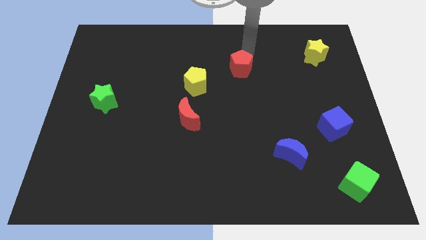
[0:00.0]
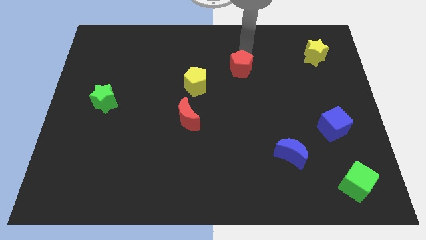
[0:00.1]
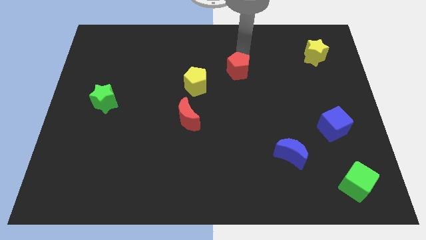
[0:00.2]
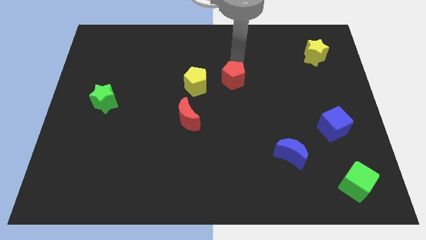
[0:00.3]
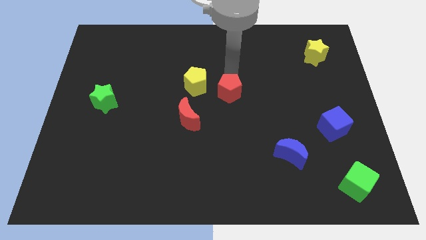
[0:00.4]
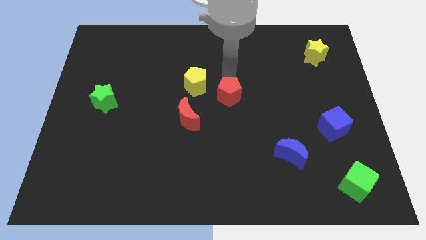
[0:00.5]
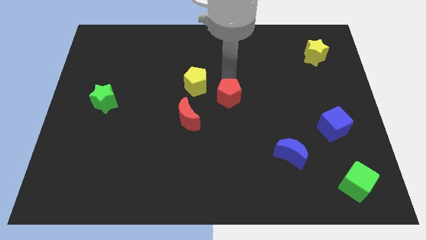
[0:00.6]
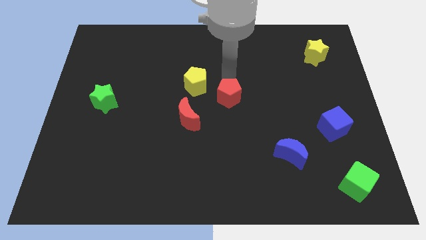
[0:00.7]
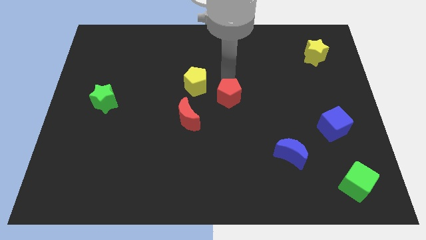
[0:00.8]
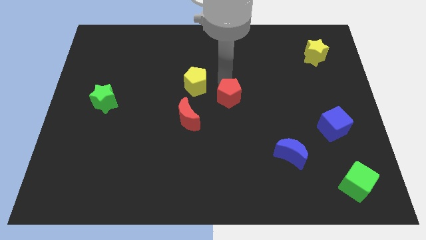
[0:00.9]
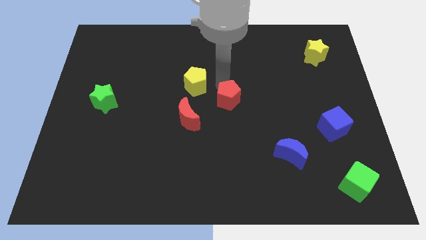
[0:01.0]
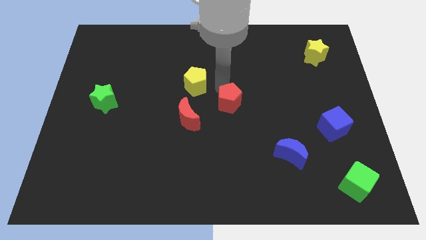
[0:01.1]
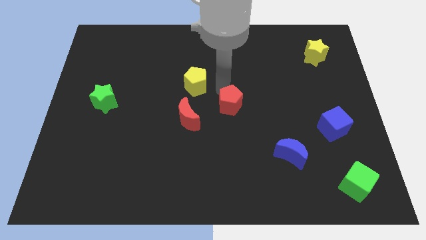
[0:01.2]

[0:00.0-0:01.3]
push red pentagon to the center of the board

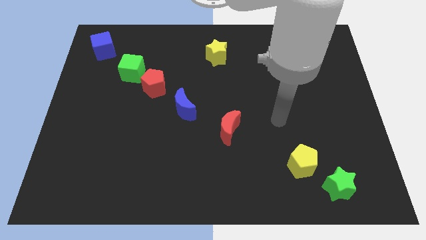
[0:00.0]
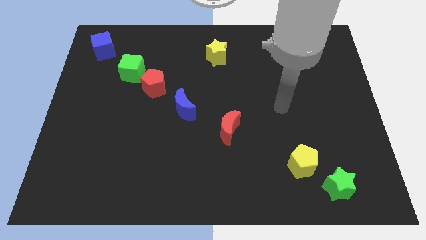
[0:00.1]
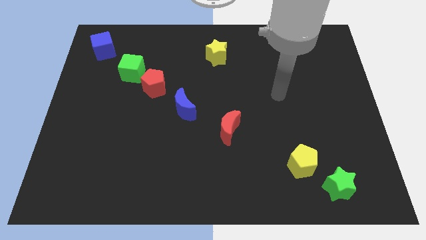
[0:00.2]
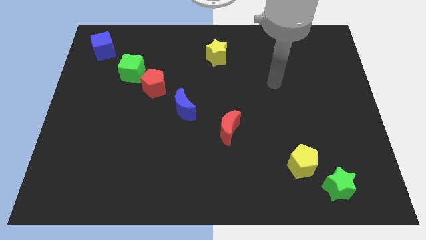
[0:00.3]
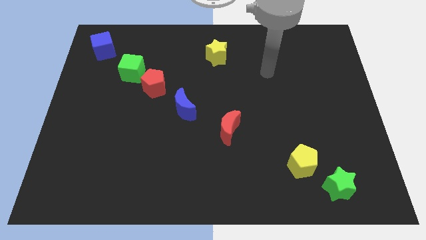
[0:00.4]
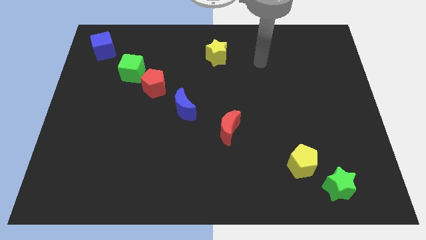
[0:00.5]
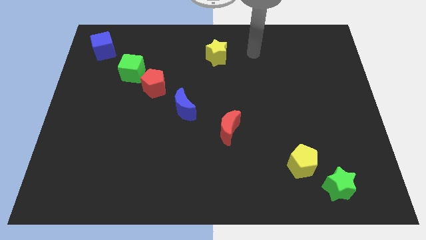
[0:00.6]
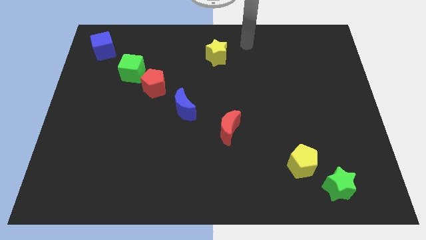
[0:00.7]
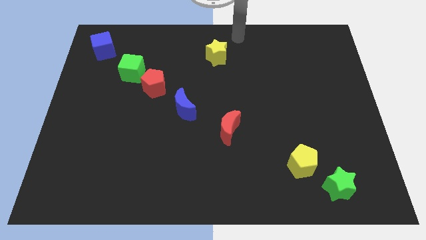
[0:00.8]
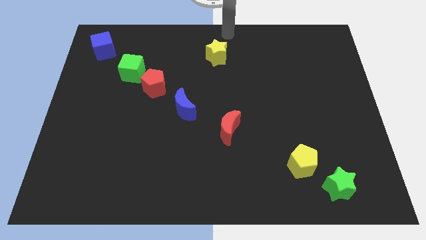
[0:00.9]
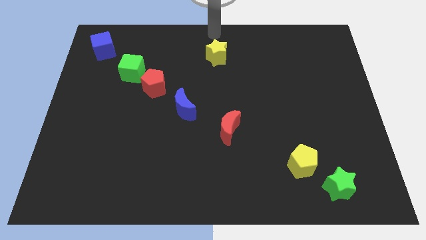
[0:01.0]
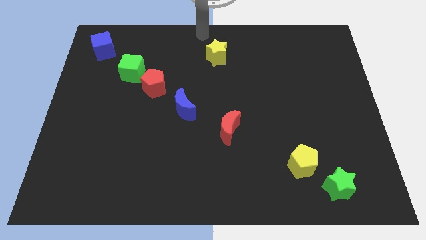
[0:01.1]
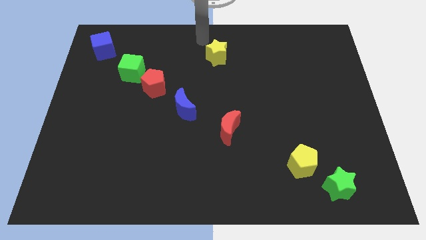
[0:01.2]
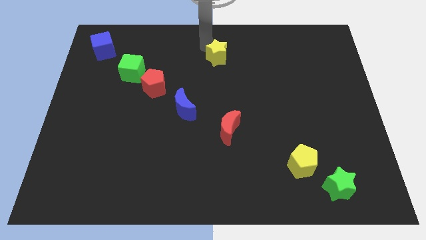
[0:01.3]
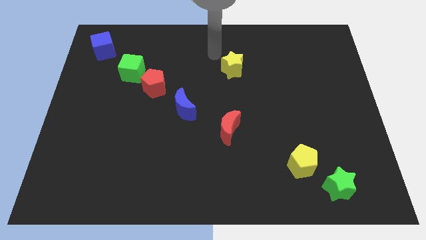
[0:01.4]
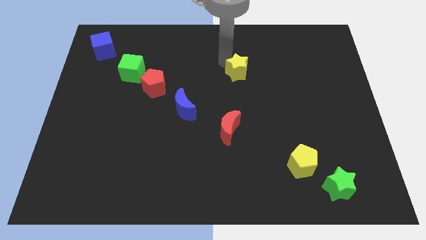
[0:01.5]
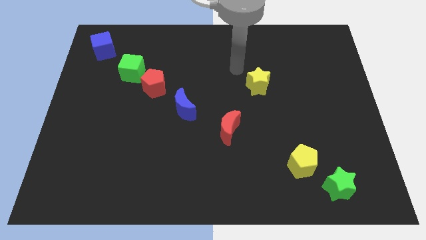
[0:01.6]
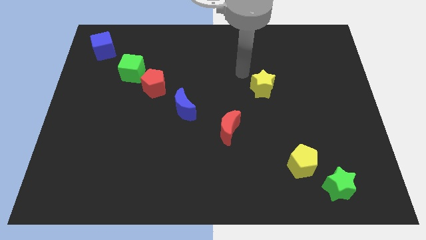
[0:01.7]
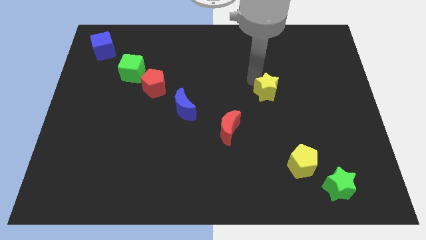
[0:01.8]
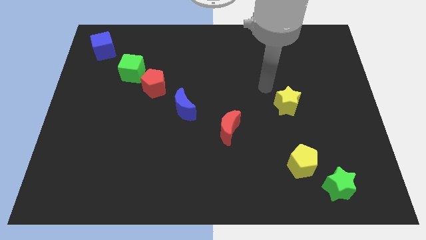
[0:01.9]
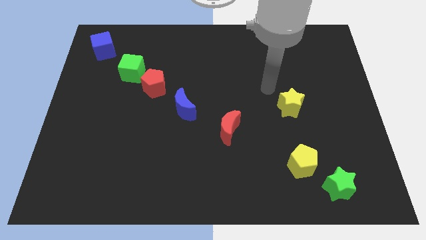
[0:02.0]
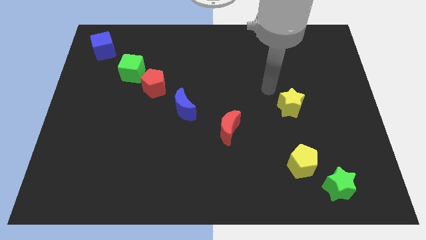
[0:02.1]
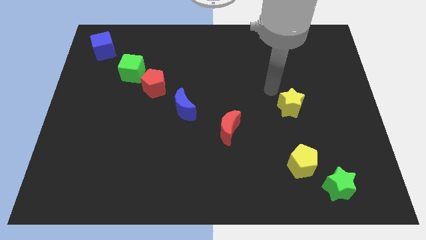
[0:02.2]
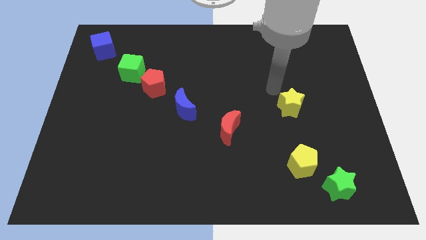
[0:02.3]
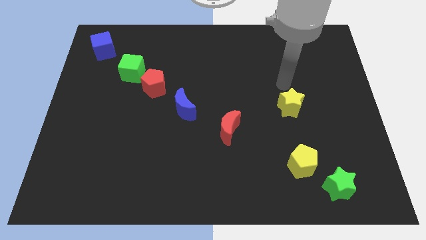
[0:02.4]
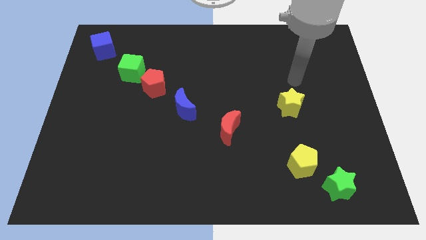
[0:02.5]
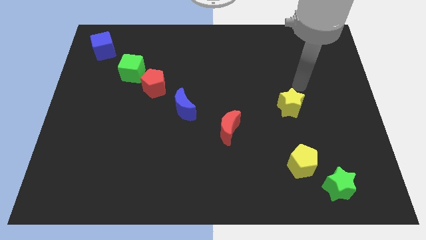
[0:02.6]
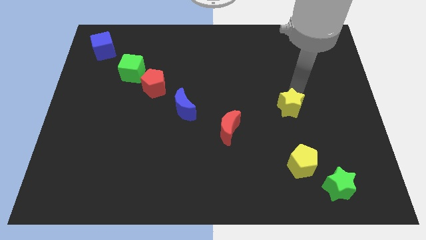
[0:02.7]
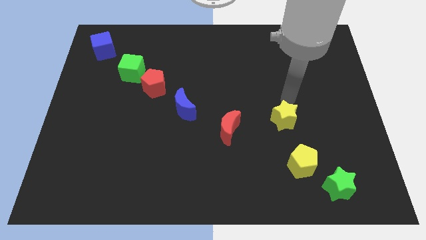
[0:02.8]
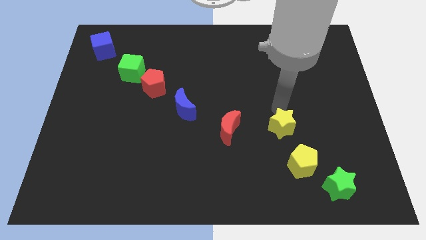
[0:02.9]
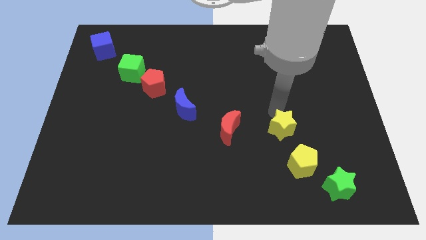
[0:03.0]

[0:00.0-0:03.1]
place the yellow star above the yellow pentagon

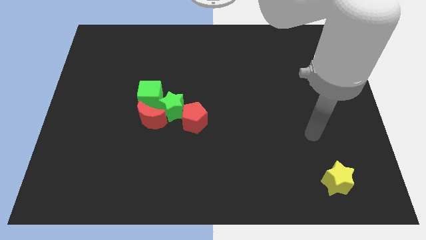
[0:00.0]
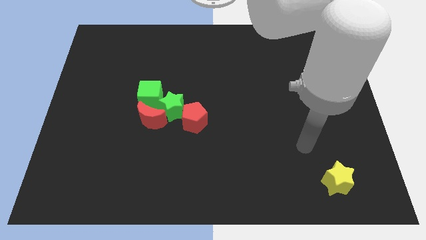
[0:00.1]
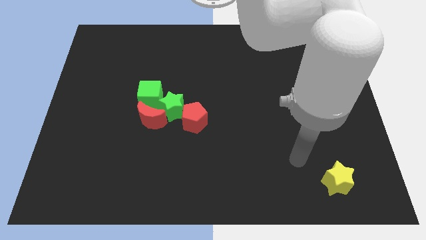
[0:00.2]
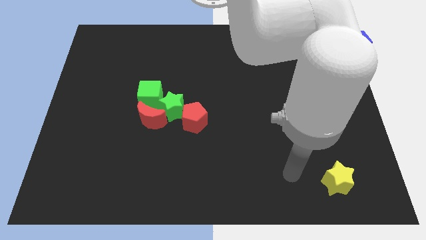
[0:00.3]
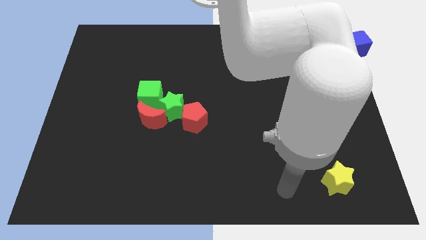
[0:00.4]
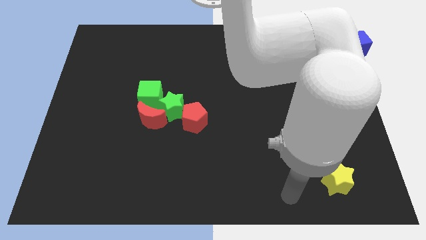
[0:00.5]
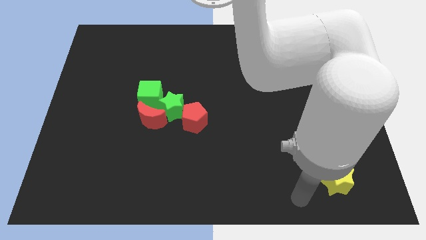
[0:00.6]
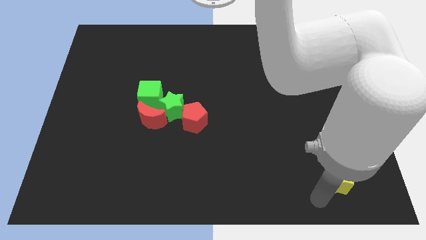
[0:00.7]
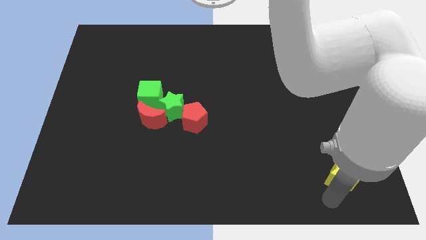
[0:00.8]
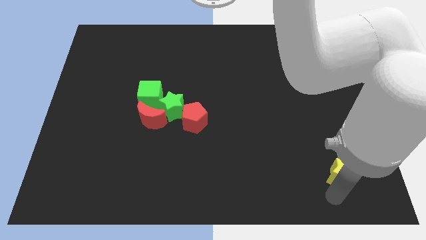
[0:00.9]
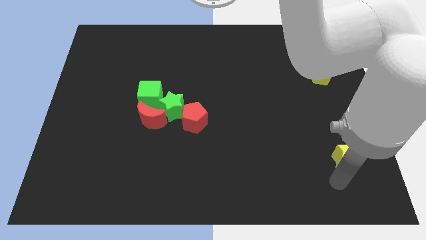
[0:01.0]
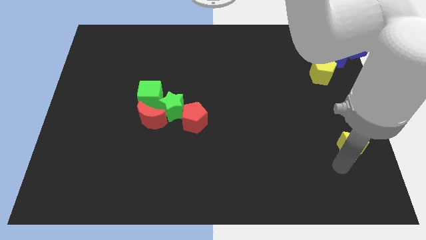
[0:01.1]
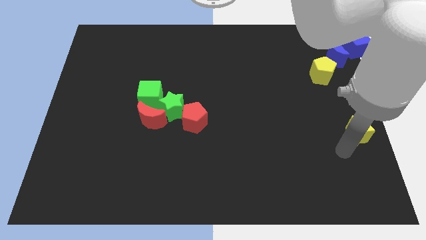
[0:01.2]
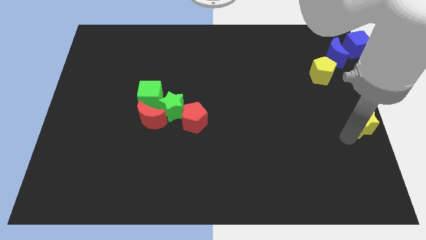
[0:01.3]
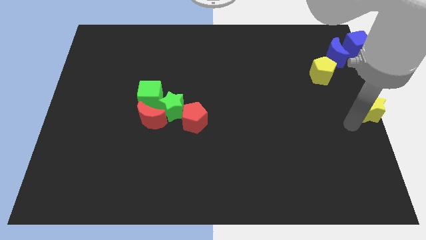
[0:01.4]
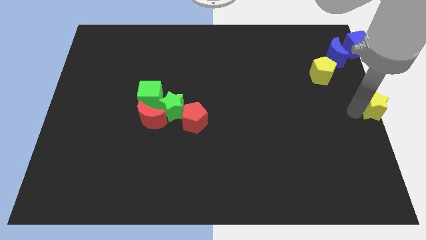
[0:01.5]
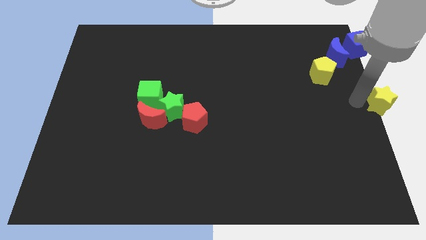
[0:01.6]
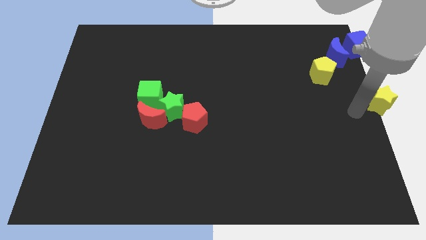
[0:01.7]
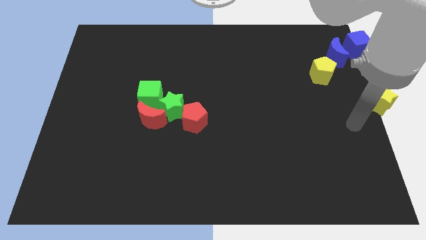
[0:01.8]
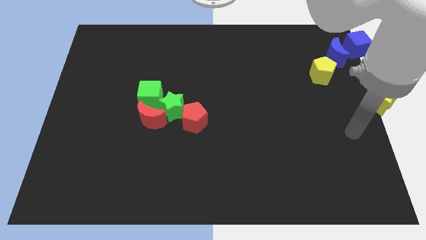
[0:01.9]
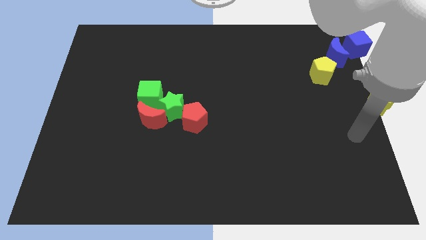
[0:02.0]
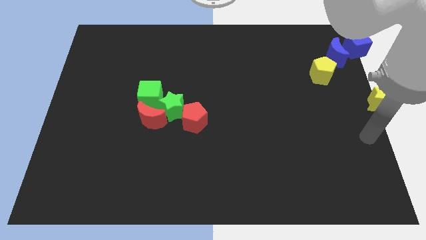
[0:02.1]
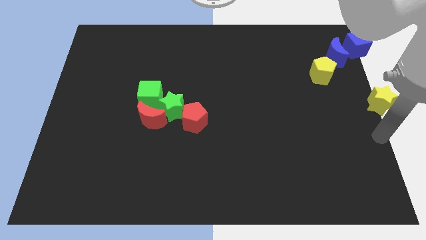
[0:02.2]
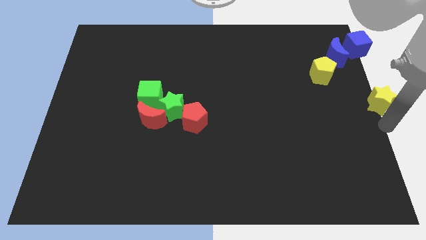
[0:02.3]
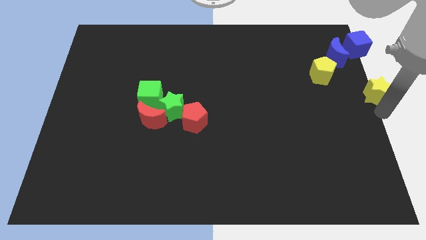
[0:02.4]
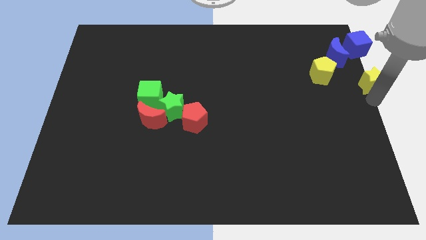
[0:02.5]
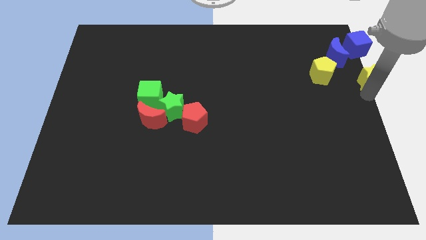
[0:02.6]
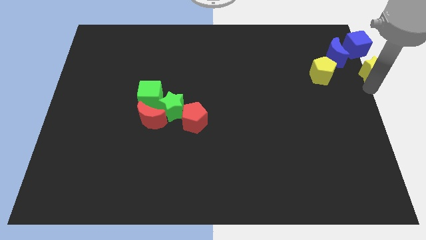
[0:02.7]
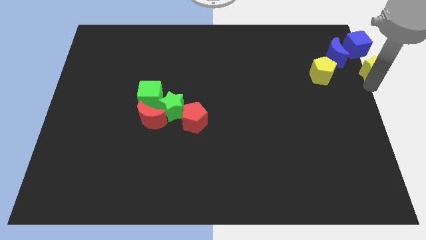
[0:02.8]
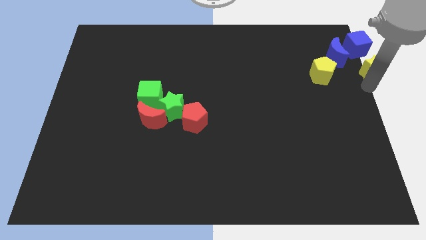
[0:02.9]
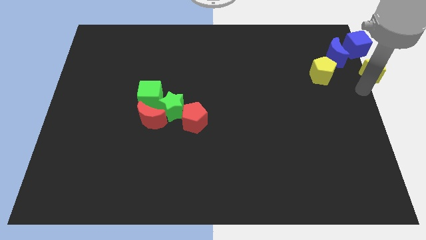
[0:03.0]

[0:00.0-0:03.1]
move the yellow star towards top right side of the board

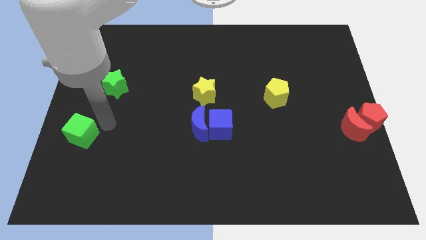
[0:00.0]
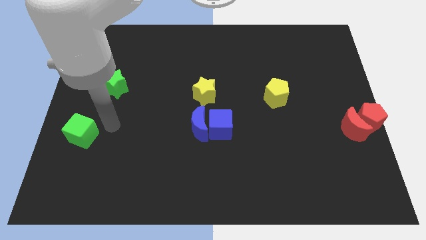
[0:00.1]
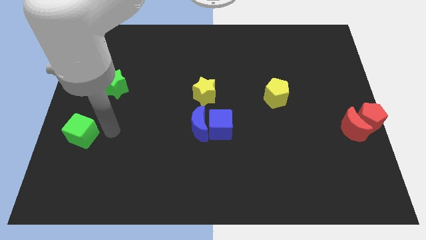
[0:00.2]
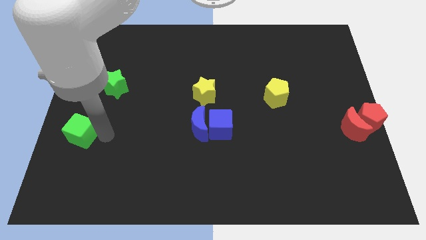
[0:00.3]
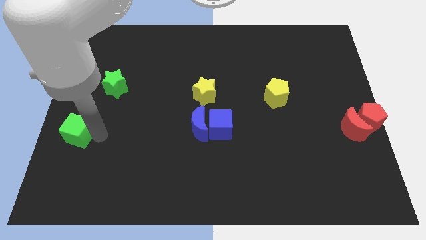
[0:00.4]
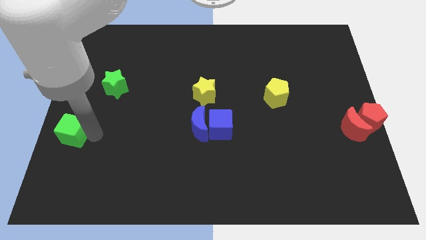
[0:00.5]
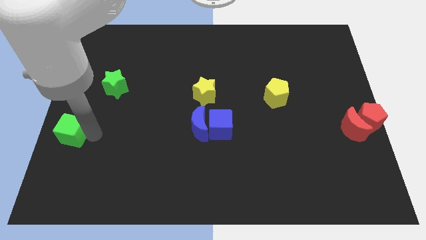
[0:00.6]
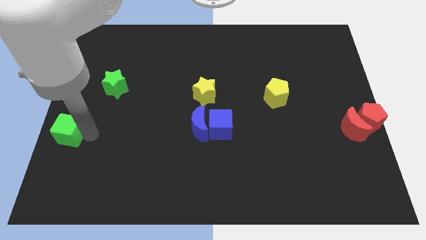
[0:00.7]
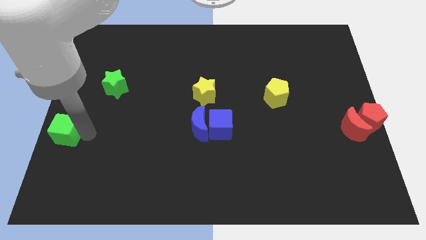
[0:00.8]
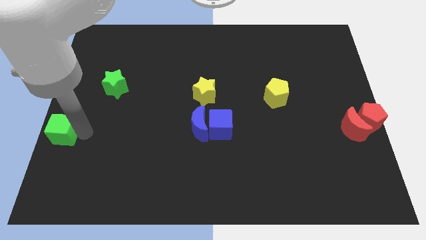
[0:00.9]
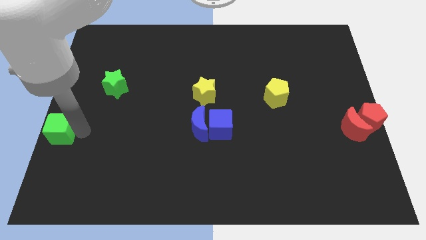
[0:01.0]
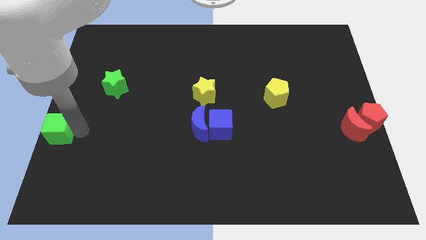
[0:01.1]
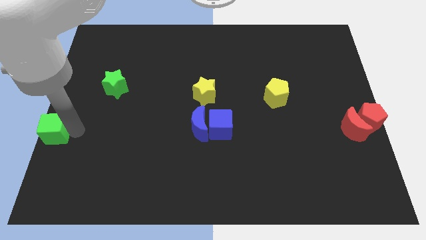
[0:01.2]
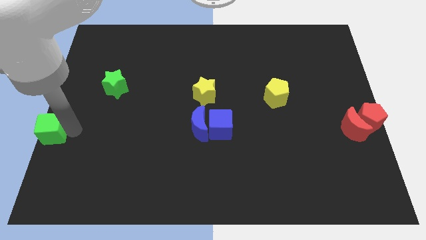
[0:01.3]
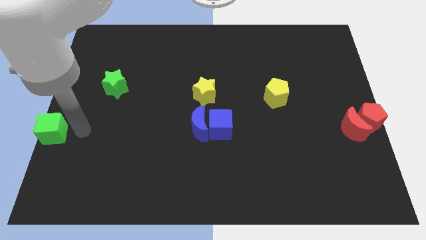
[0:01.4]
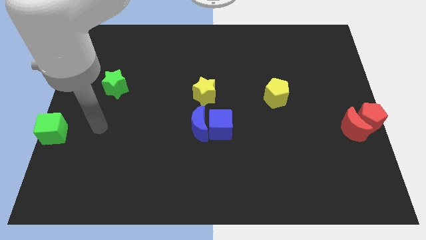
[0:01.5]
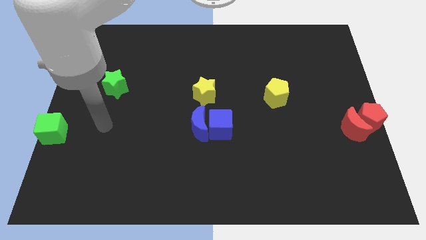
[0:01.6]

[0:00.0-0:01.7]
push the green cube to the left center
